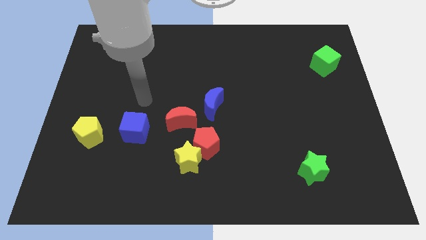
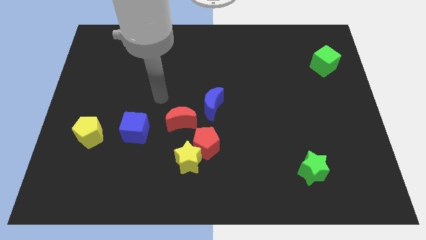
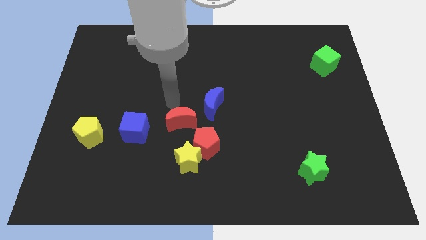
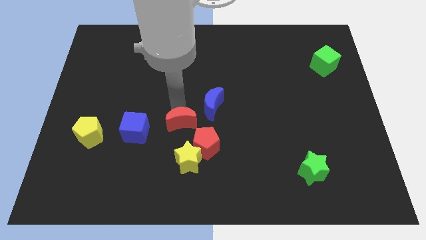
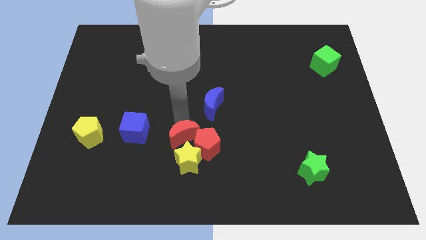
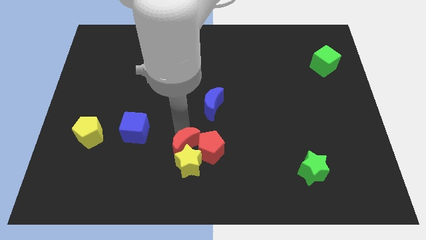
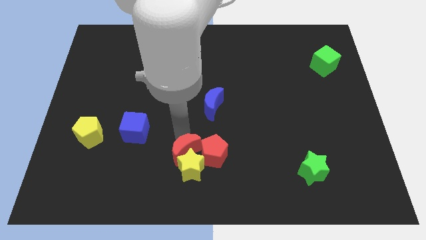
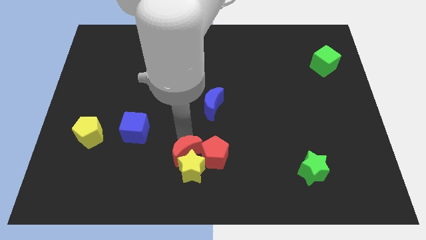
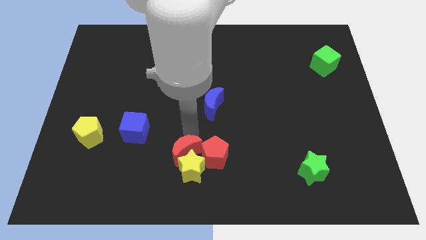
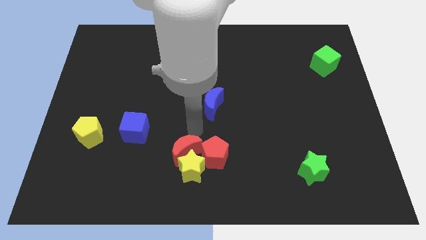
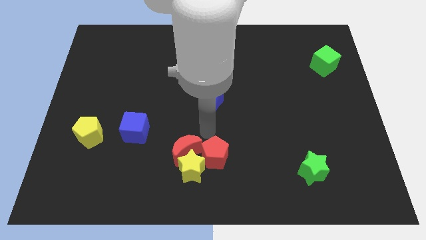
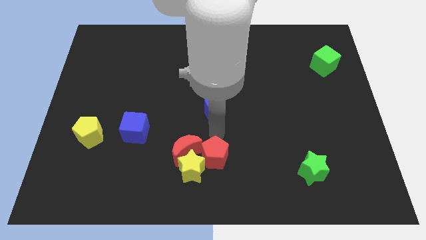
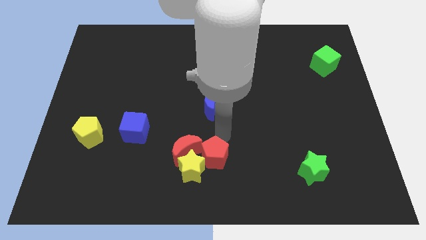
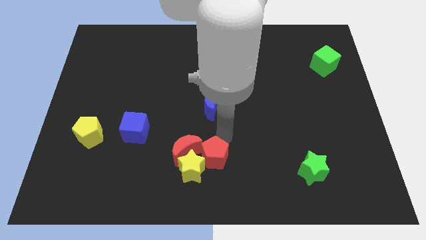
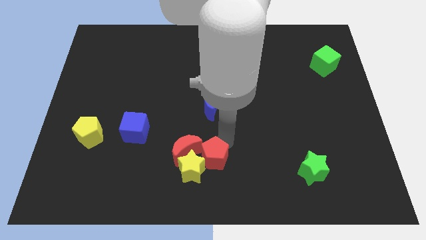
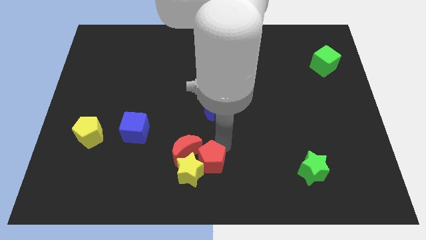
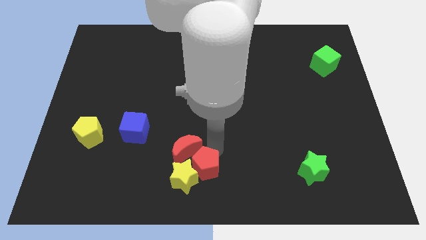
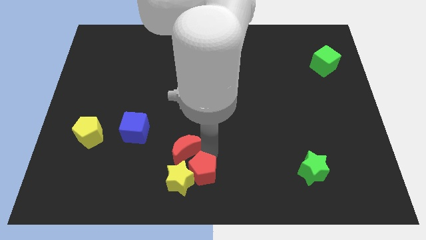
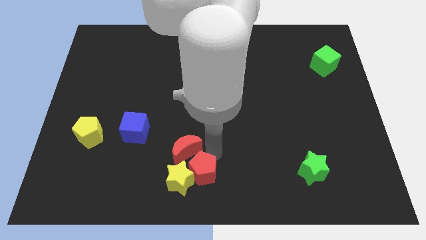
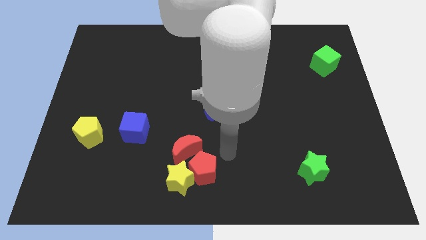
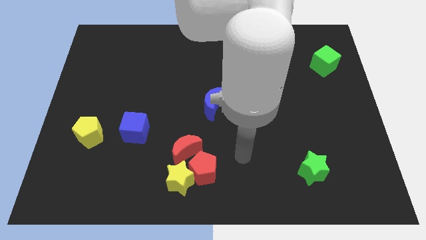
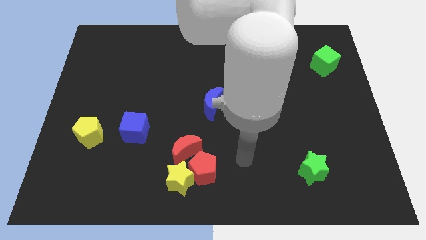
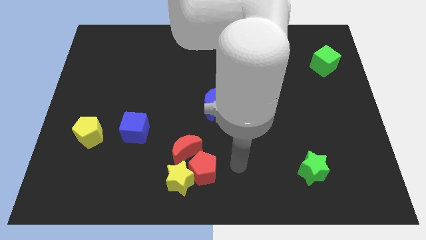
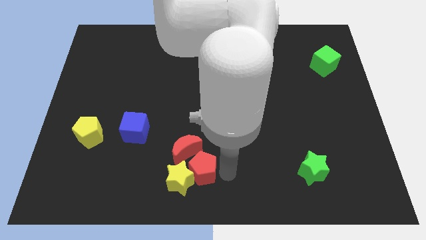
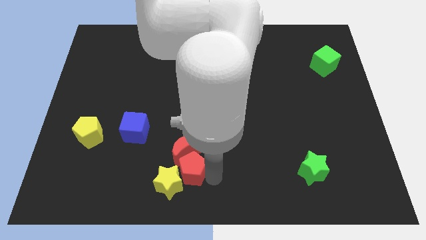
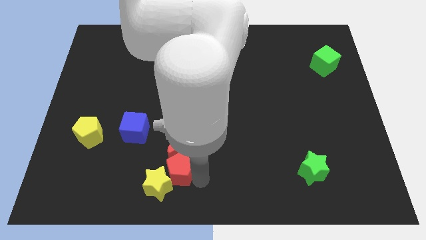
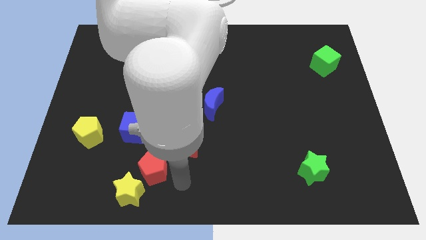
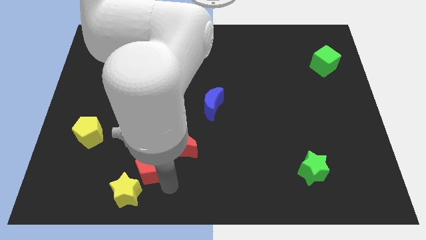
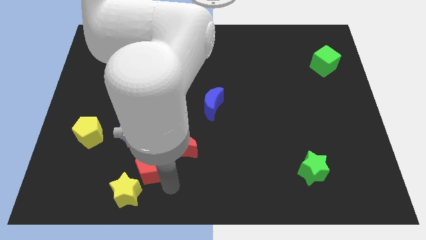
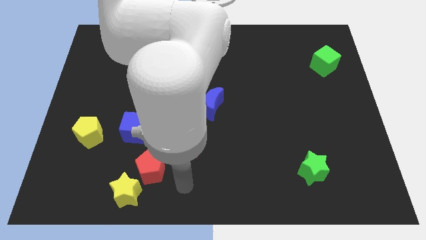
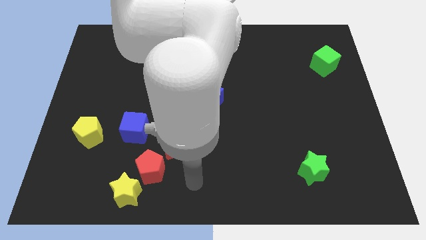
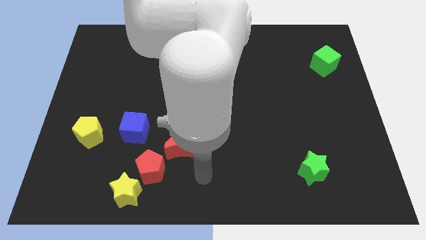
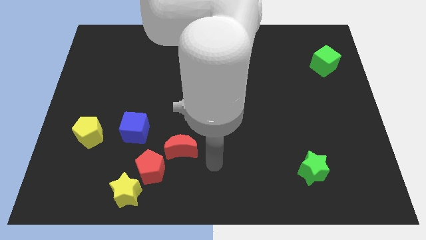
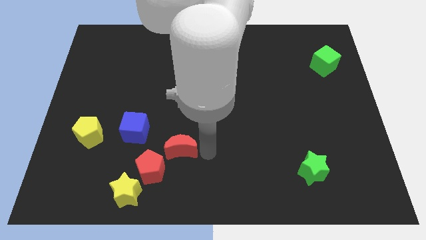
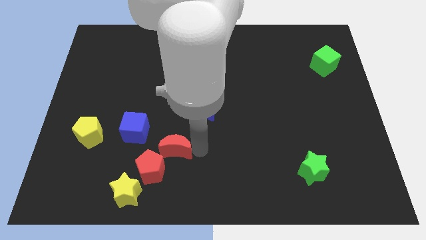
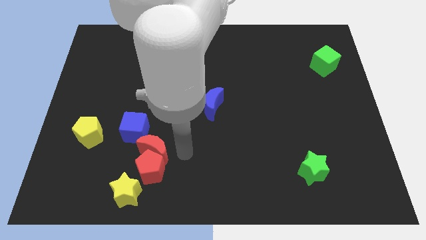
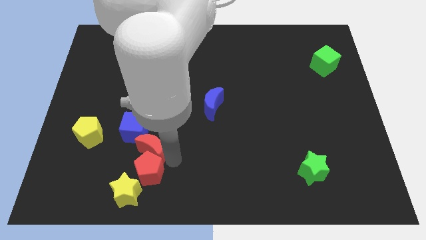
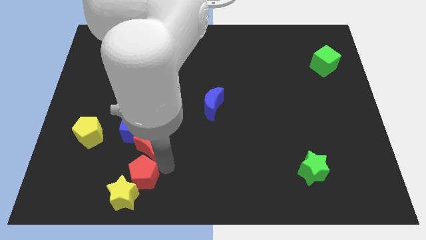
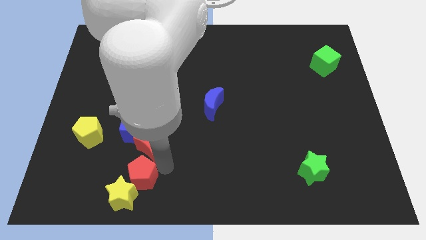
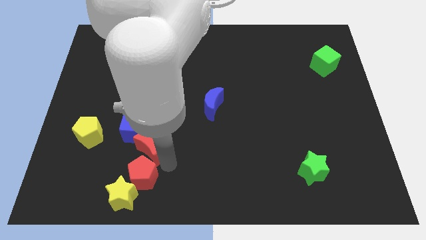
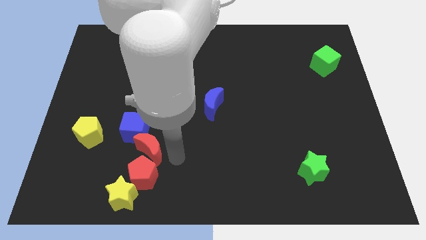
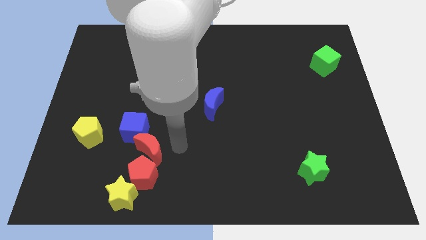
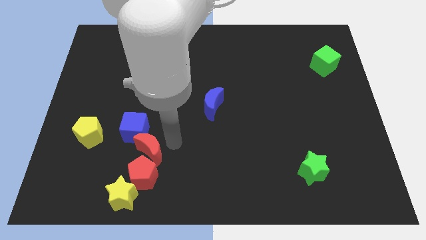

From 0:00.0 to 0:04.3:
push red blocks above the yellow star

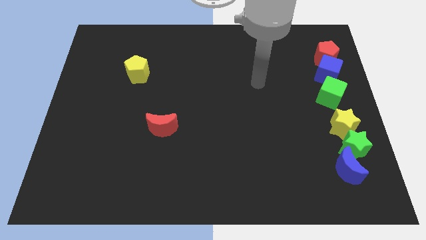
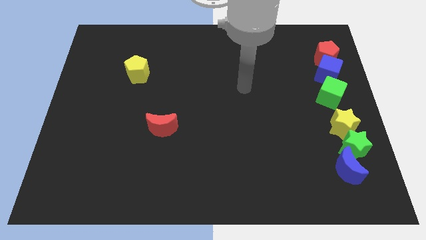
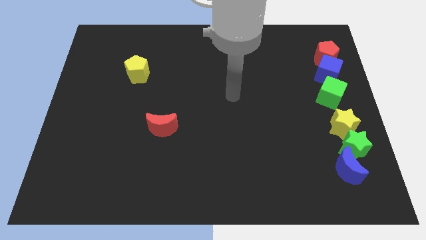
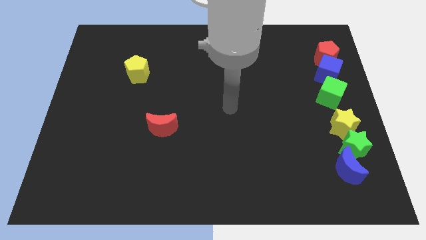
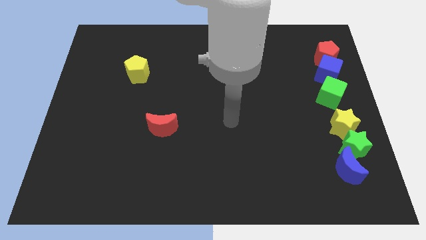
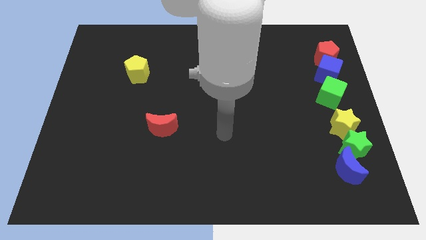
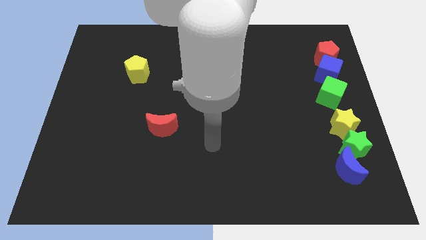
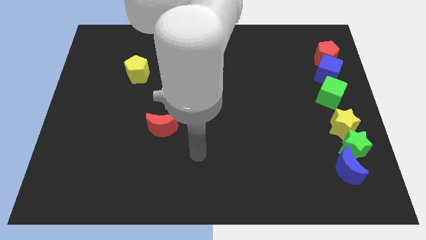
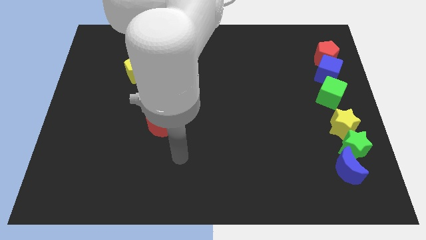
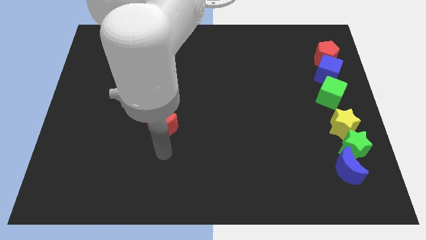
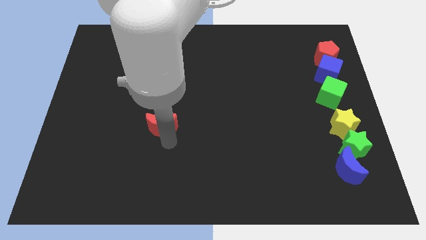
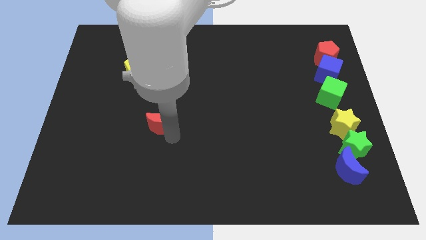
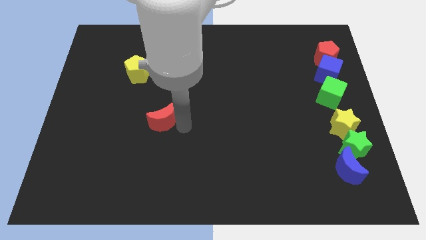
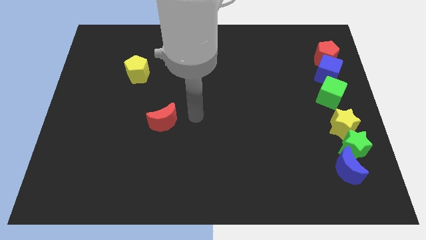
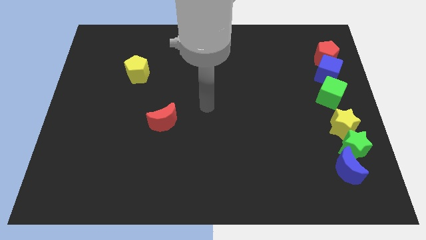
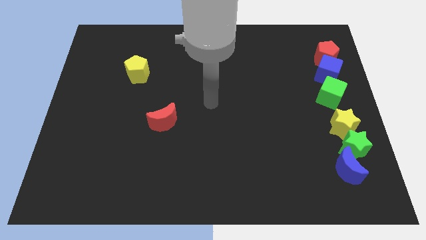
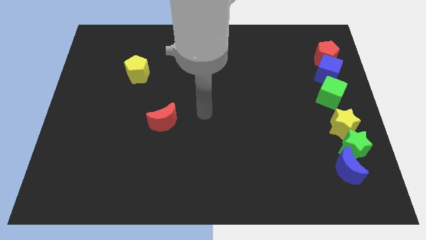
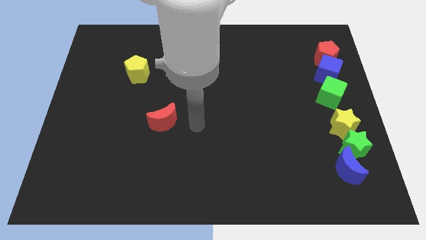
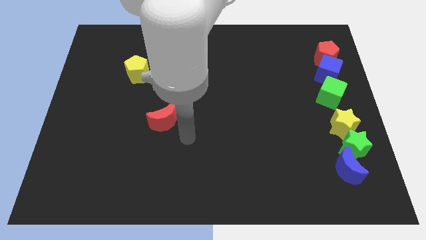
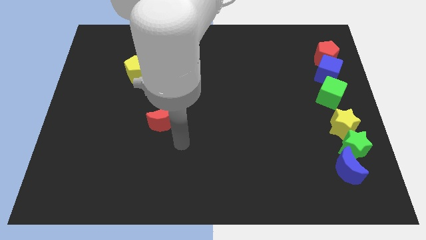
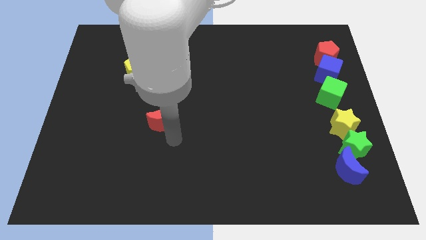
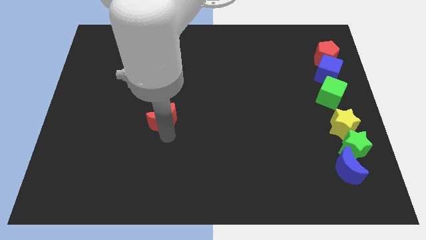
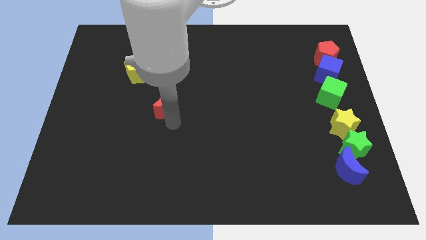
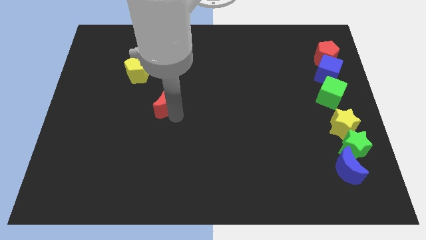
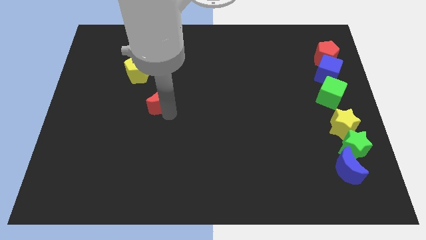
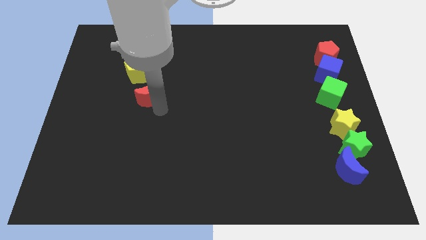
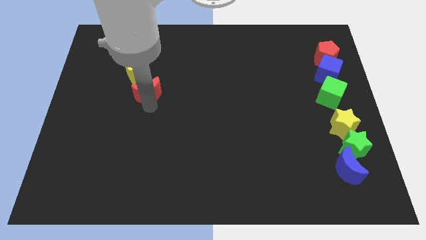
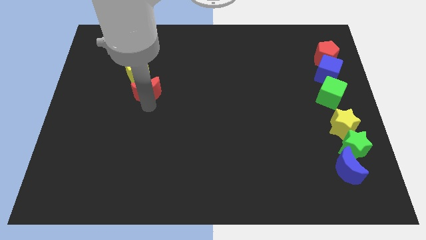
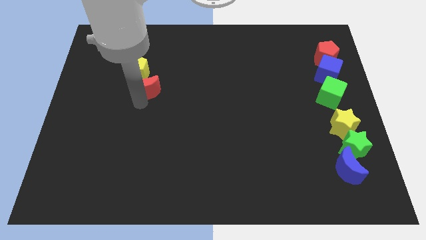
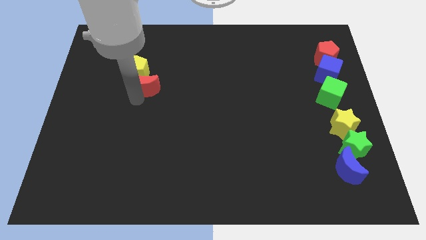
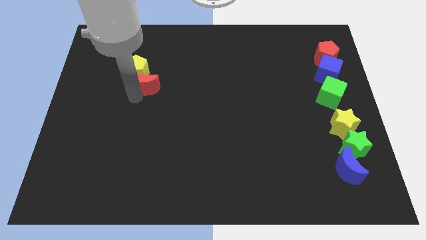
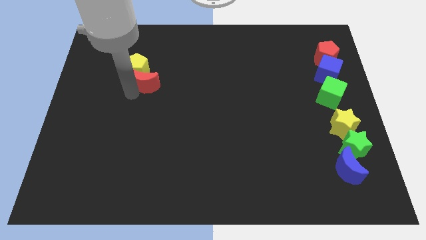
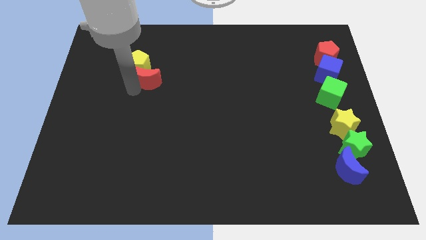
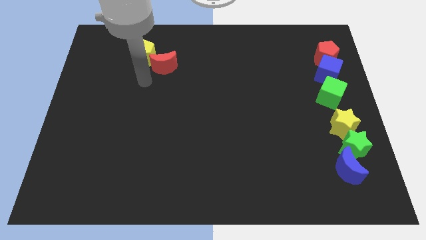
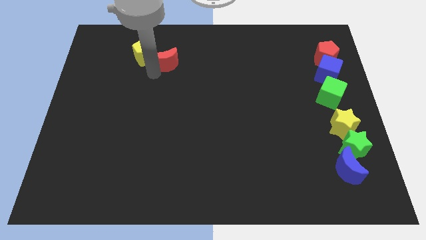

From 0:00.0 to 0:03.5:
push the red crescent into the yellow pentagon

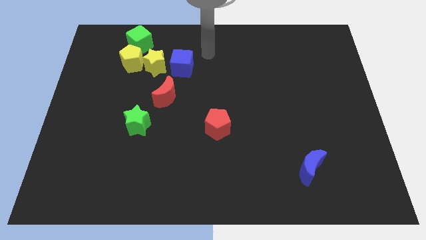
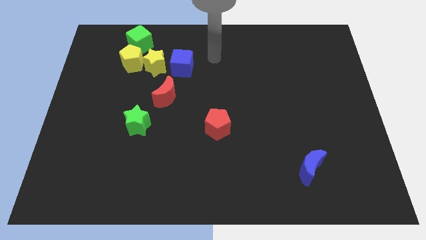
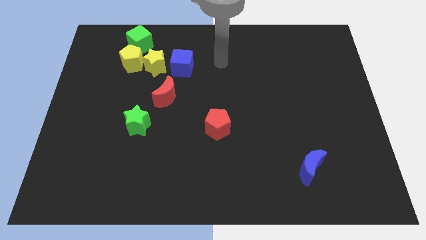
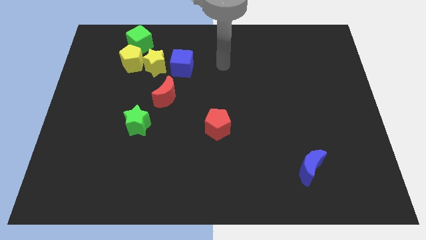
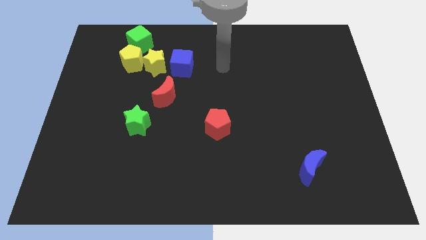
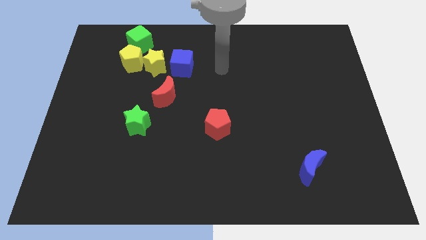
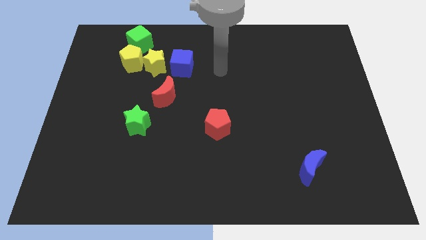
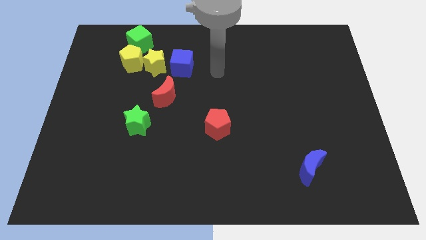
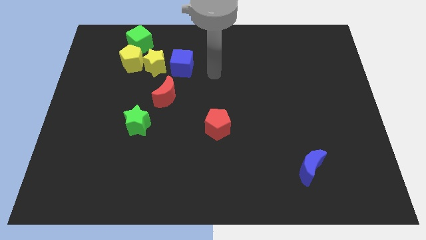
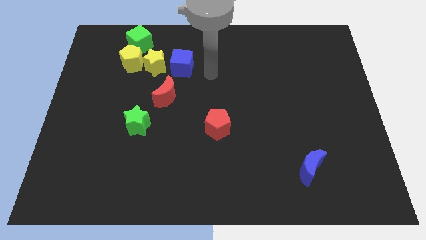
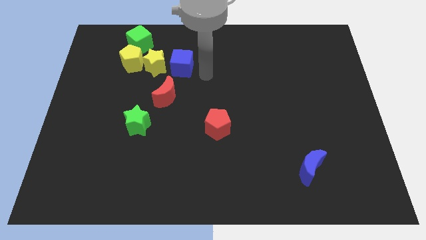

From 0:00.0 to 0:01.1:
place your arm to the right side of the blue cube

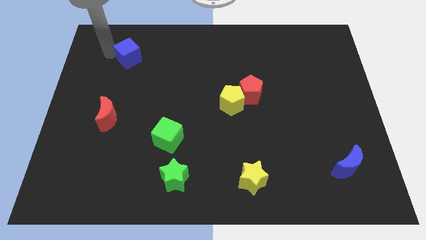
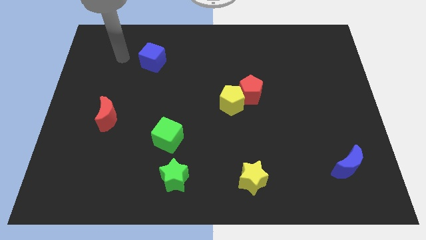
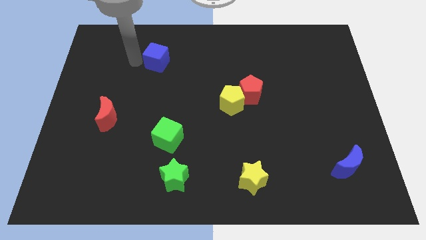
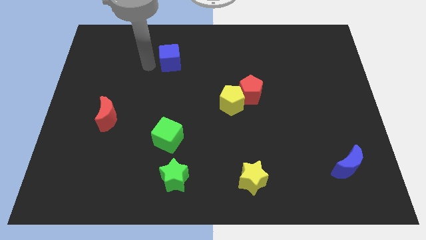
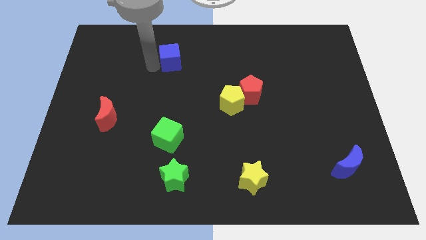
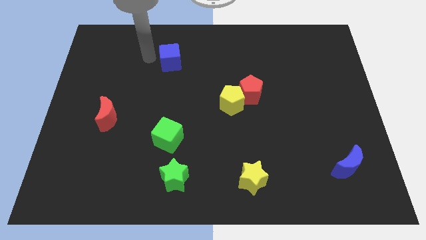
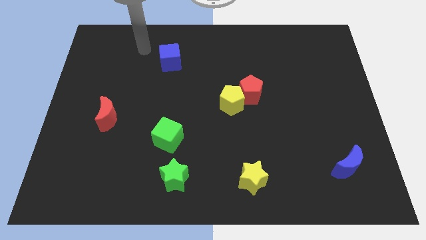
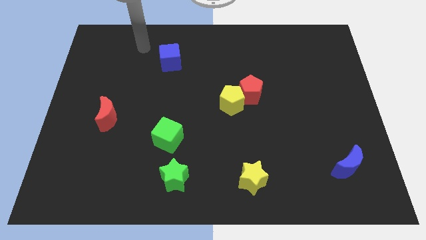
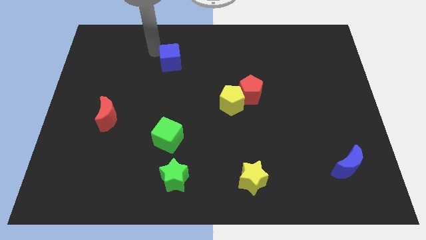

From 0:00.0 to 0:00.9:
slightly move the blue cube towards the right
